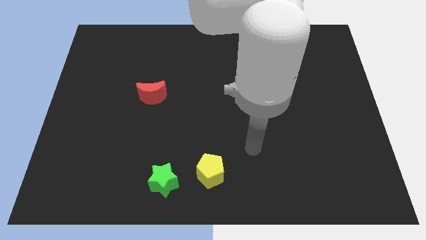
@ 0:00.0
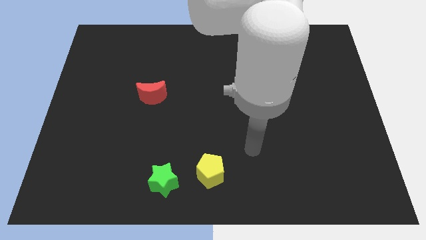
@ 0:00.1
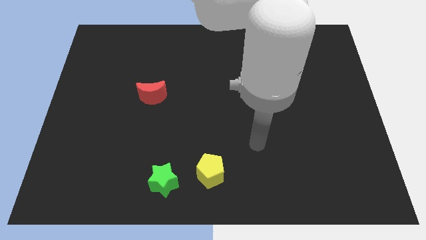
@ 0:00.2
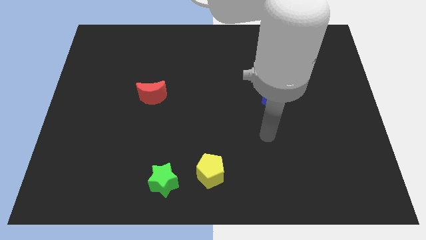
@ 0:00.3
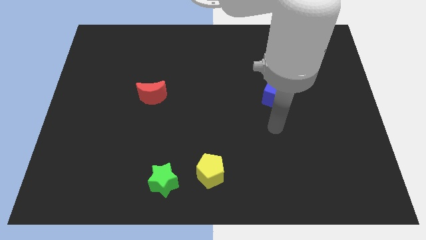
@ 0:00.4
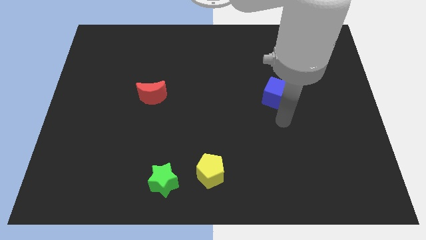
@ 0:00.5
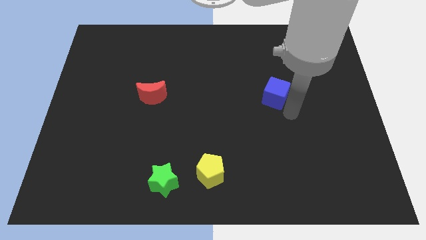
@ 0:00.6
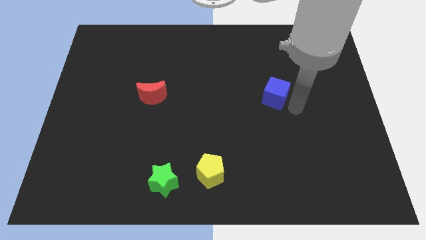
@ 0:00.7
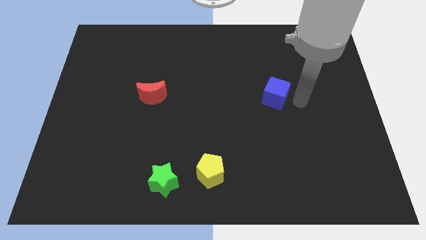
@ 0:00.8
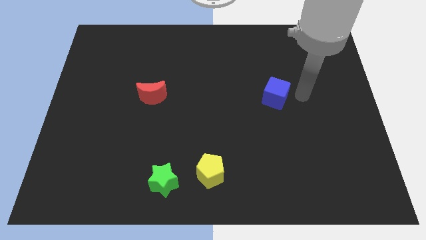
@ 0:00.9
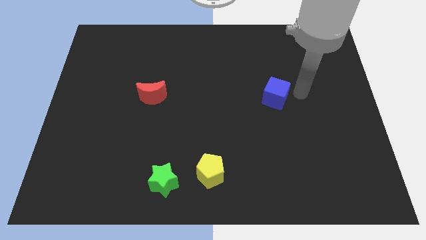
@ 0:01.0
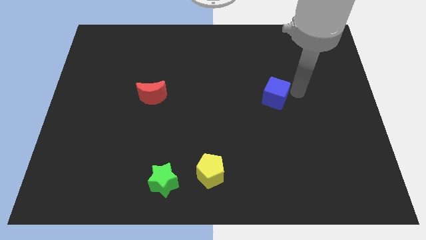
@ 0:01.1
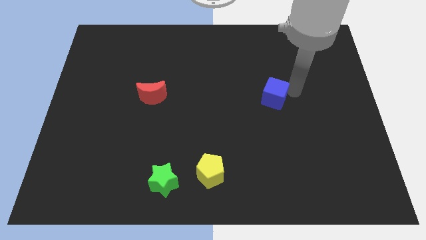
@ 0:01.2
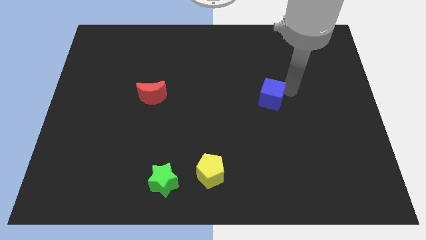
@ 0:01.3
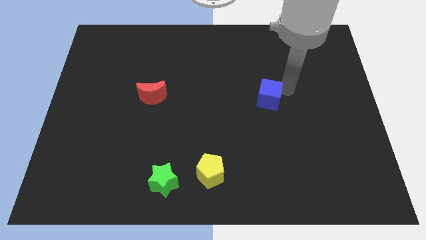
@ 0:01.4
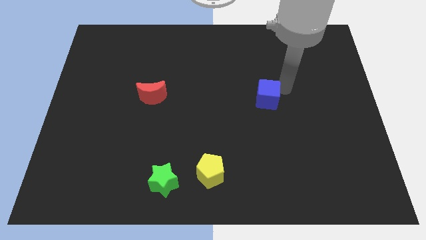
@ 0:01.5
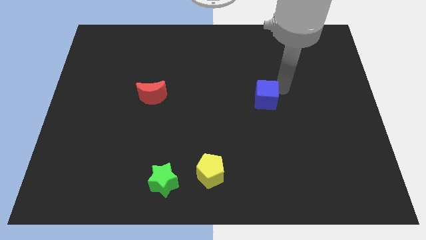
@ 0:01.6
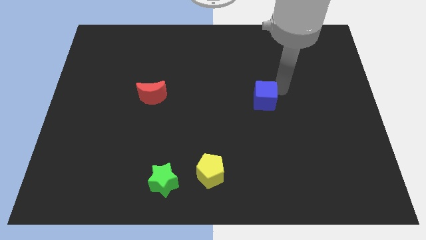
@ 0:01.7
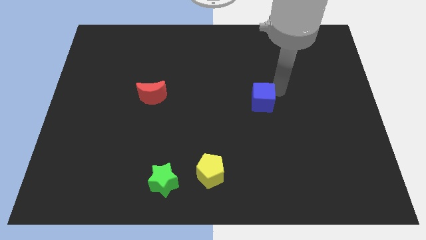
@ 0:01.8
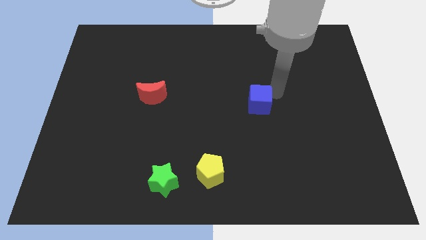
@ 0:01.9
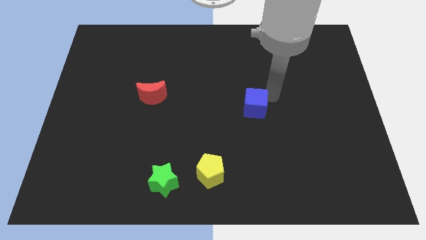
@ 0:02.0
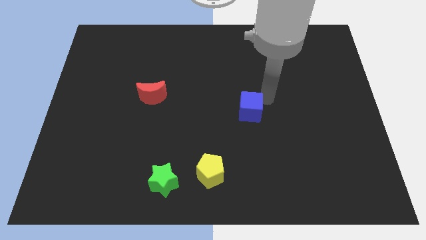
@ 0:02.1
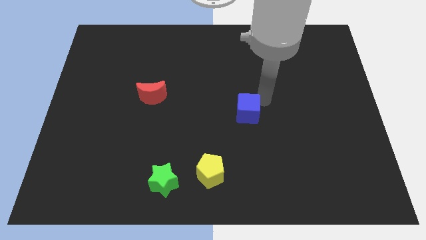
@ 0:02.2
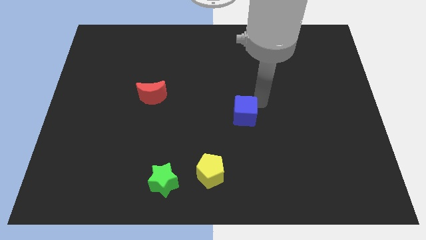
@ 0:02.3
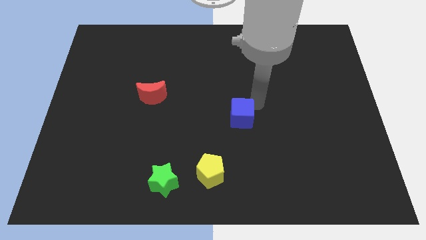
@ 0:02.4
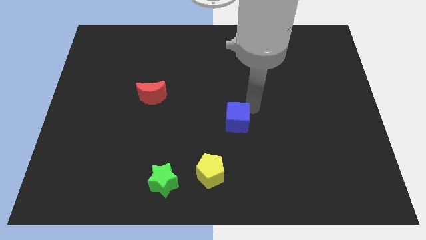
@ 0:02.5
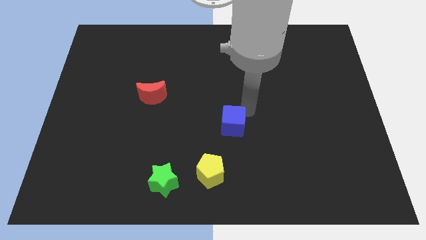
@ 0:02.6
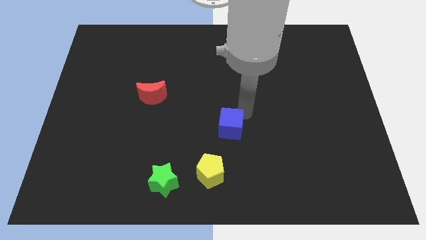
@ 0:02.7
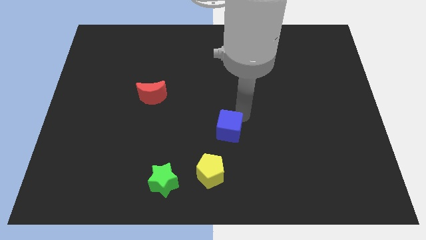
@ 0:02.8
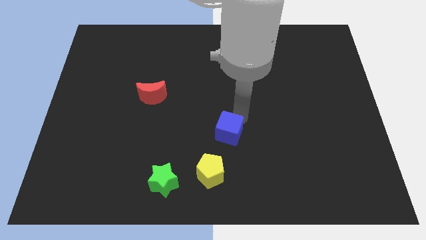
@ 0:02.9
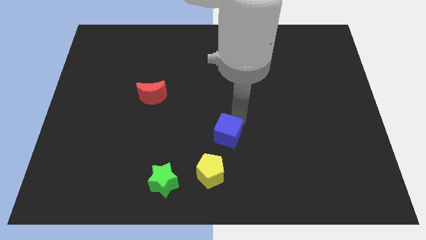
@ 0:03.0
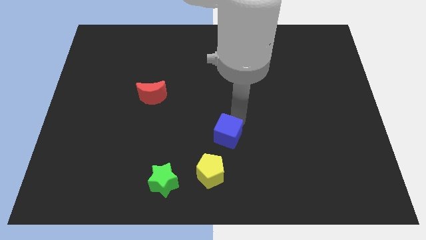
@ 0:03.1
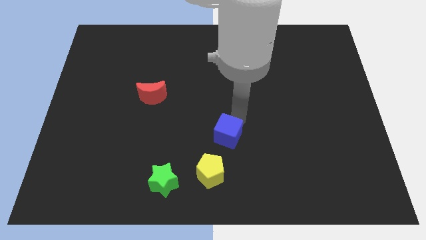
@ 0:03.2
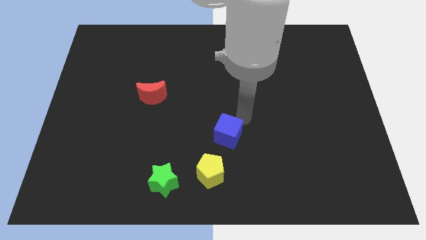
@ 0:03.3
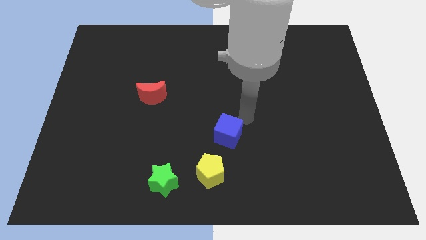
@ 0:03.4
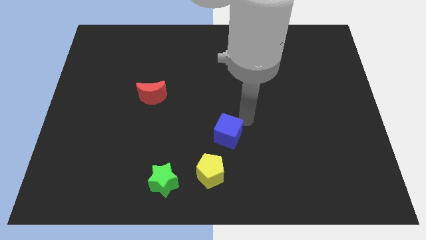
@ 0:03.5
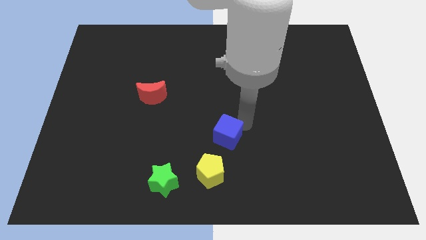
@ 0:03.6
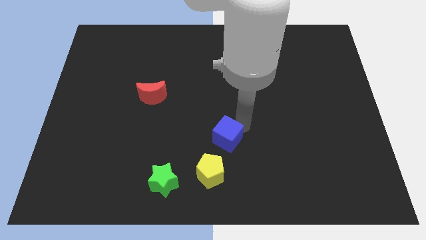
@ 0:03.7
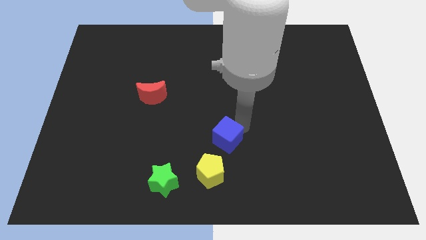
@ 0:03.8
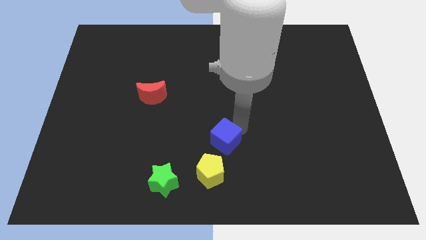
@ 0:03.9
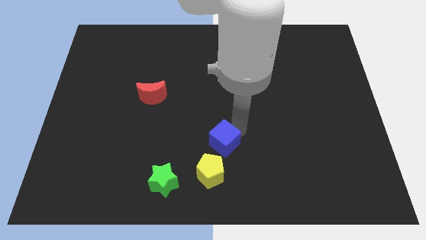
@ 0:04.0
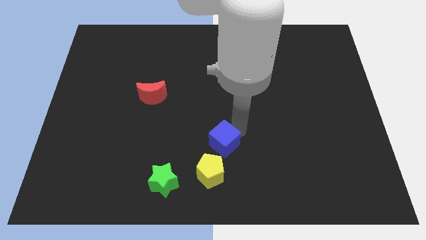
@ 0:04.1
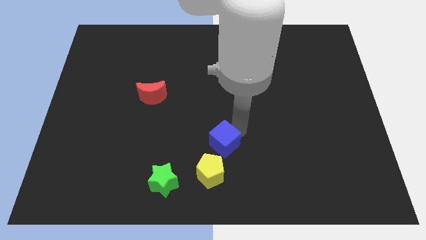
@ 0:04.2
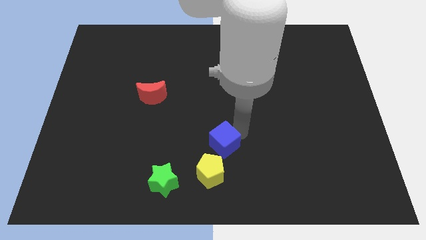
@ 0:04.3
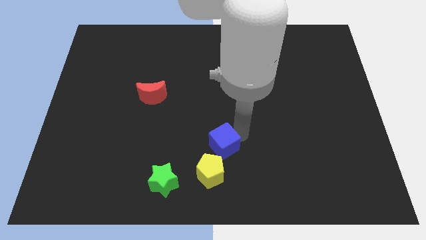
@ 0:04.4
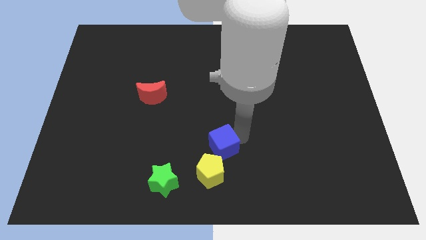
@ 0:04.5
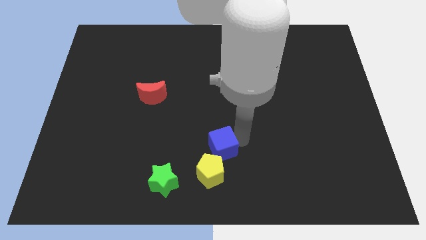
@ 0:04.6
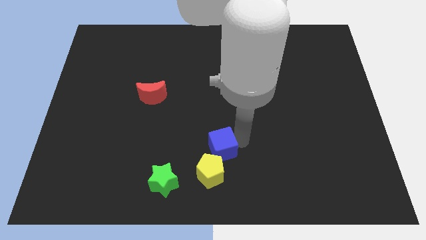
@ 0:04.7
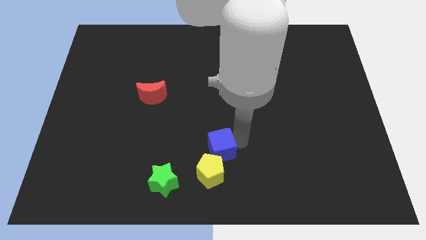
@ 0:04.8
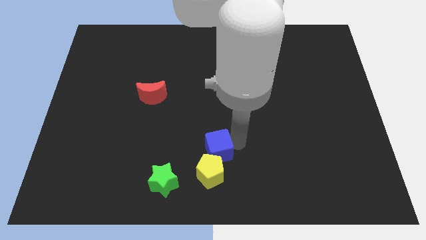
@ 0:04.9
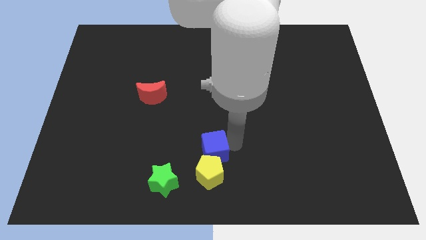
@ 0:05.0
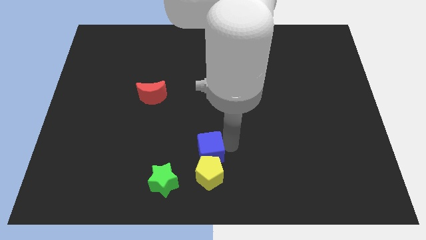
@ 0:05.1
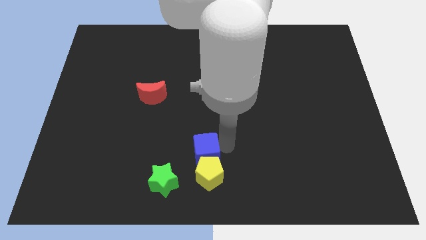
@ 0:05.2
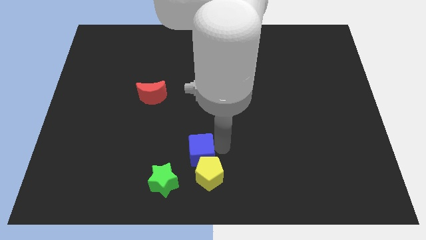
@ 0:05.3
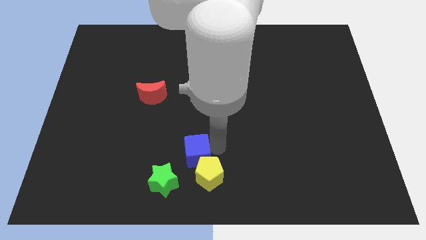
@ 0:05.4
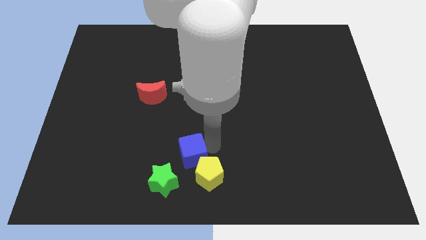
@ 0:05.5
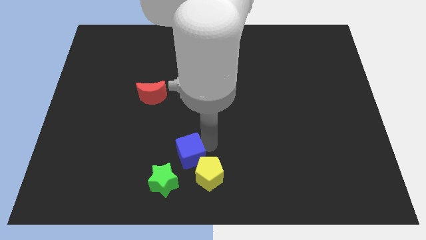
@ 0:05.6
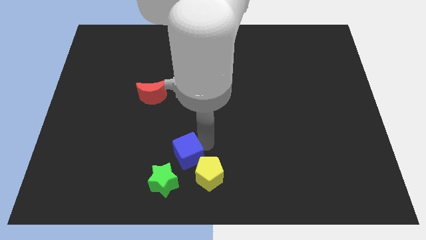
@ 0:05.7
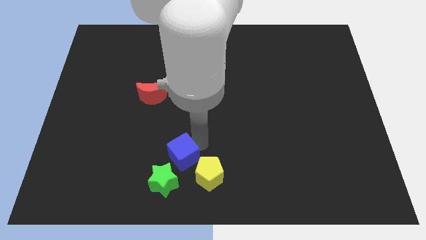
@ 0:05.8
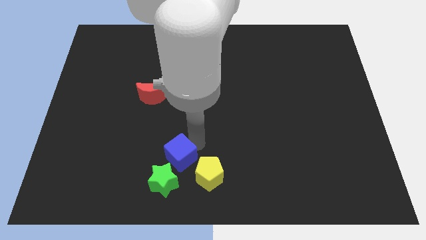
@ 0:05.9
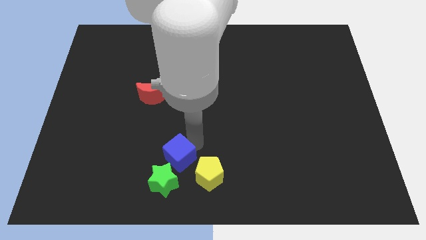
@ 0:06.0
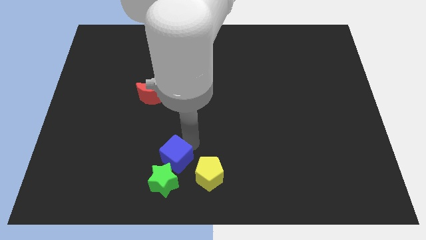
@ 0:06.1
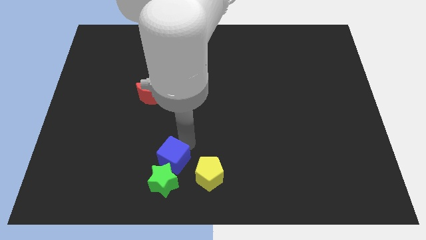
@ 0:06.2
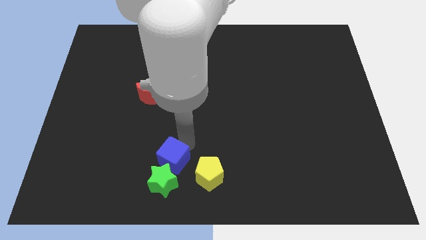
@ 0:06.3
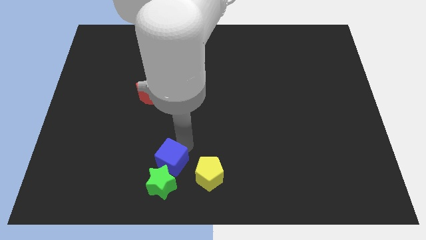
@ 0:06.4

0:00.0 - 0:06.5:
slide the blue cube close to the green star

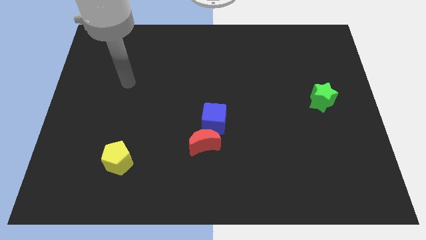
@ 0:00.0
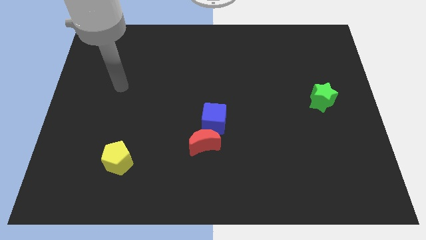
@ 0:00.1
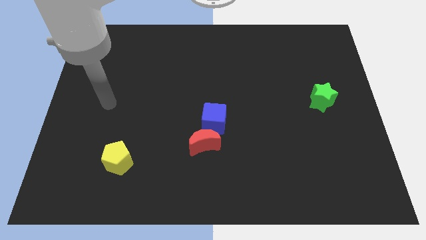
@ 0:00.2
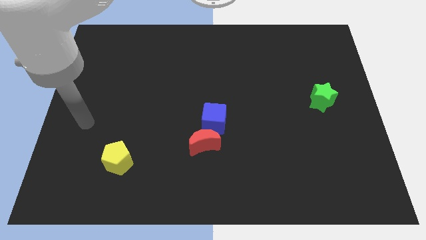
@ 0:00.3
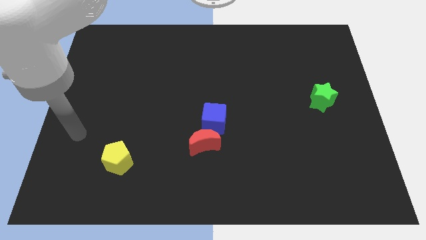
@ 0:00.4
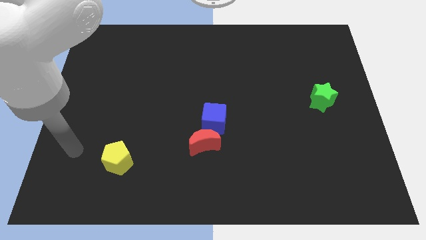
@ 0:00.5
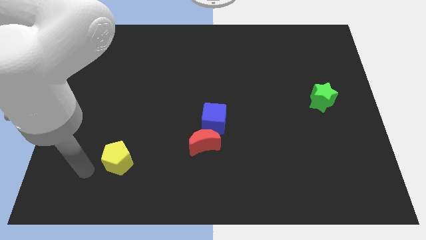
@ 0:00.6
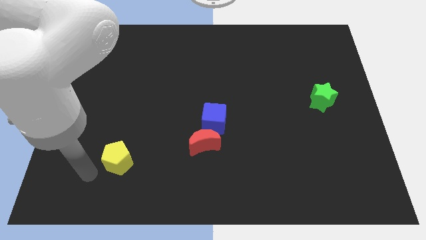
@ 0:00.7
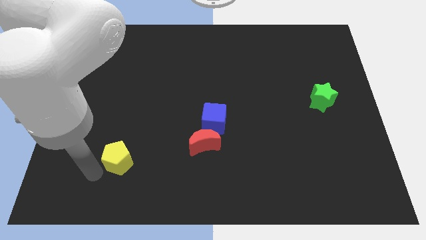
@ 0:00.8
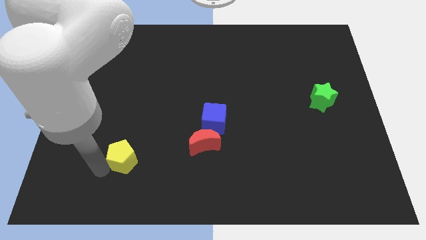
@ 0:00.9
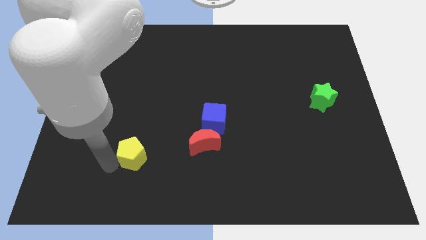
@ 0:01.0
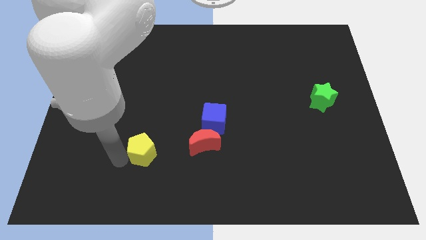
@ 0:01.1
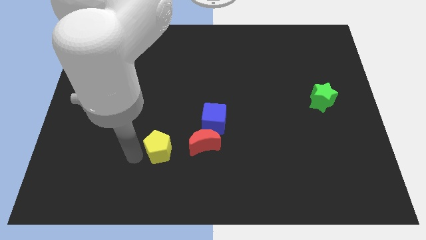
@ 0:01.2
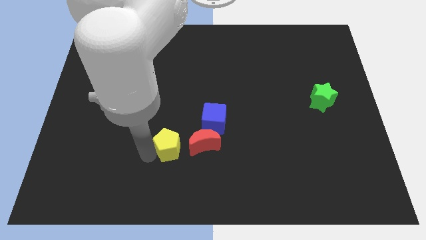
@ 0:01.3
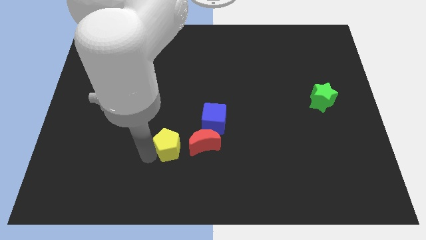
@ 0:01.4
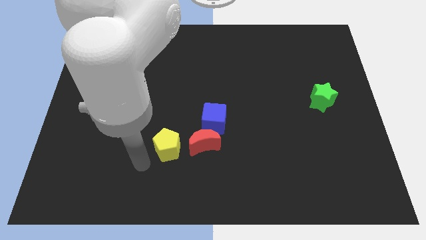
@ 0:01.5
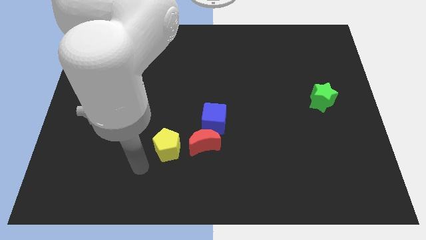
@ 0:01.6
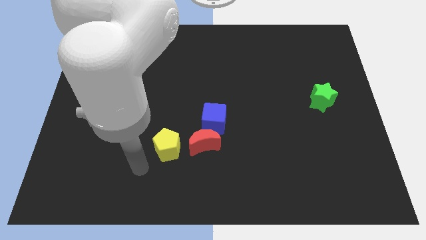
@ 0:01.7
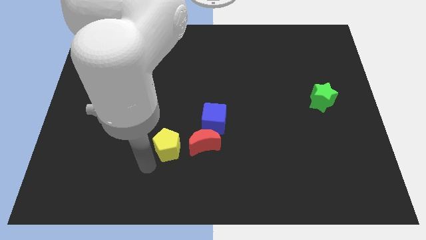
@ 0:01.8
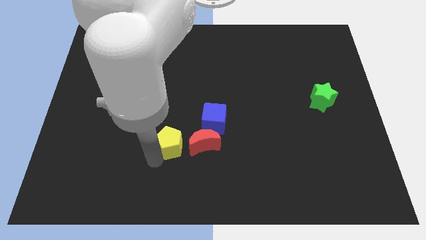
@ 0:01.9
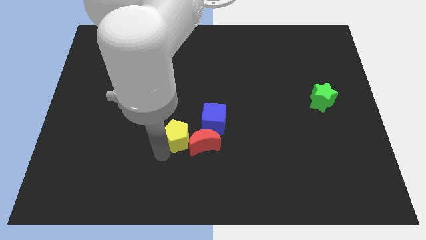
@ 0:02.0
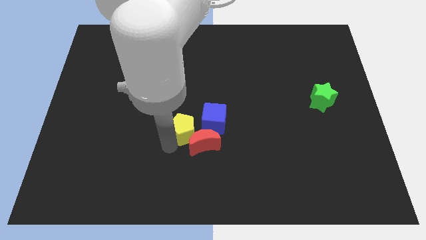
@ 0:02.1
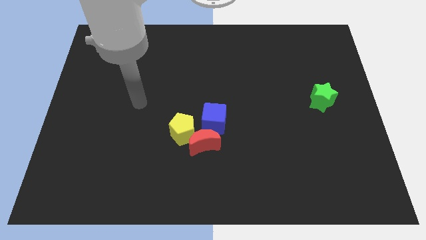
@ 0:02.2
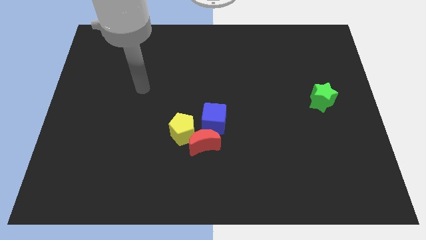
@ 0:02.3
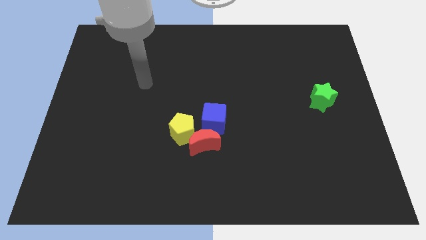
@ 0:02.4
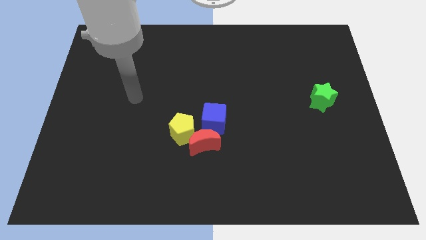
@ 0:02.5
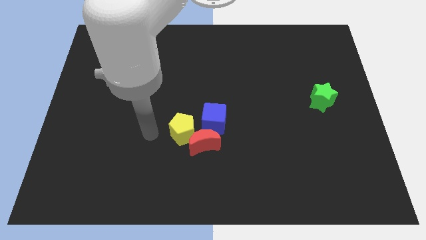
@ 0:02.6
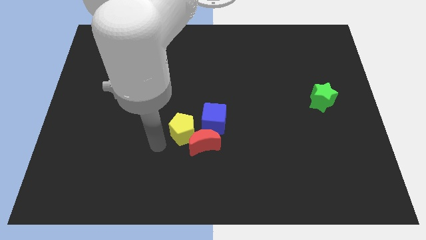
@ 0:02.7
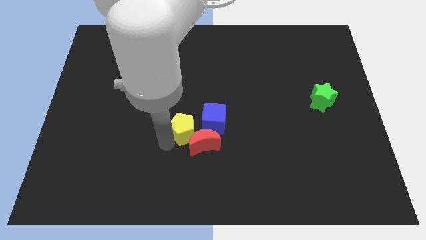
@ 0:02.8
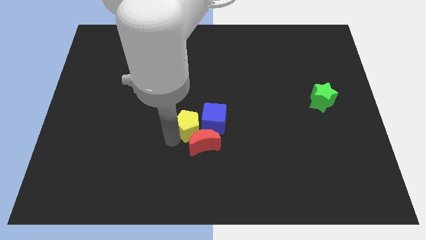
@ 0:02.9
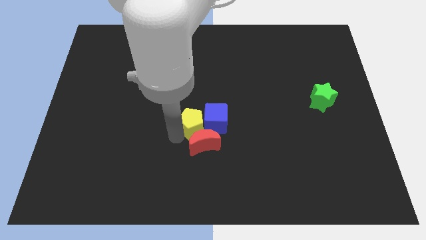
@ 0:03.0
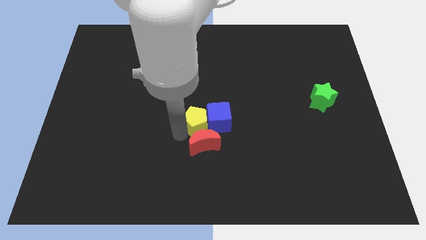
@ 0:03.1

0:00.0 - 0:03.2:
push the yellow block next to the cube
